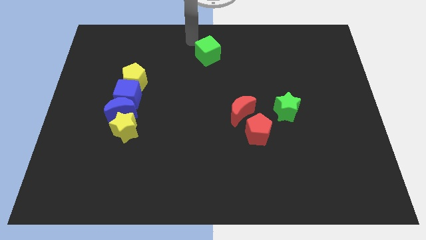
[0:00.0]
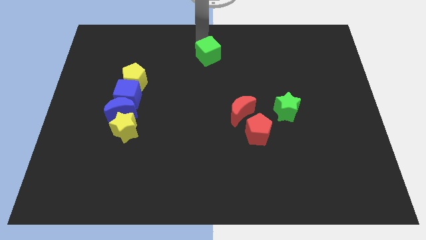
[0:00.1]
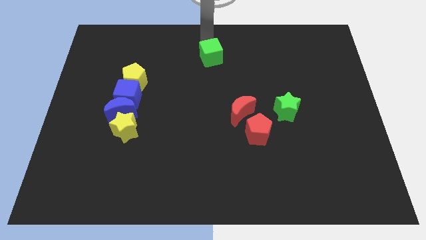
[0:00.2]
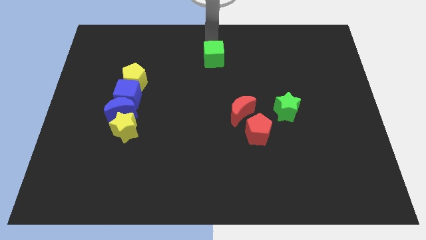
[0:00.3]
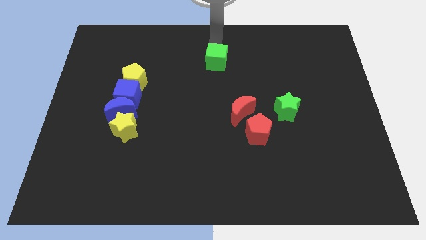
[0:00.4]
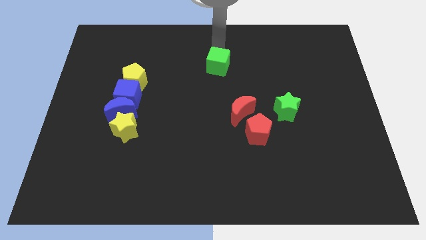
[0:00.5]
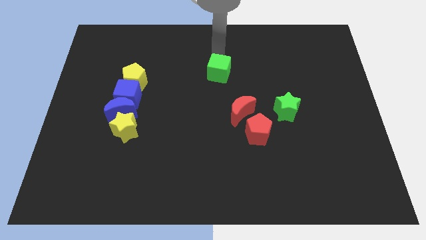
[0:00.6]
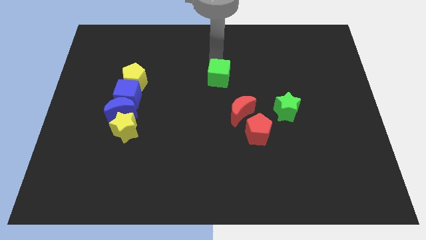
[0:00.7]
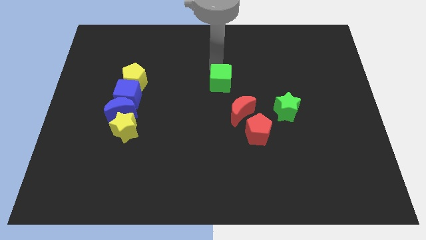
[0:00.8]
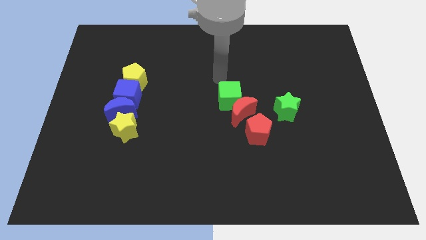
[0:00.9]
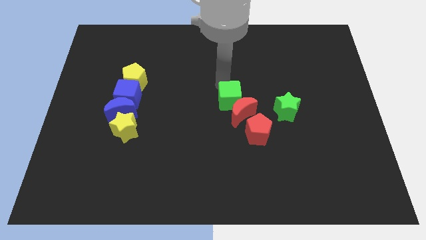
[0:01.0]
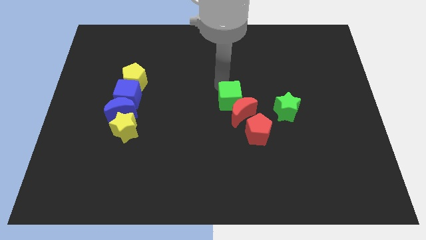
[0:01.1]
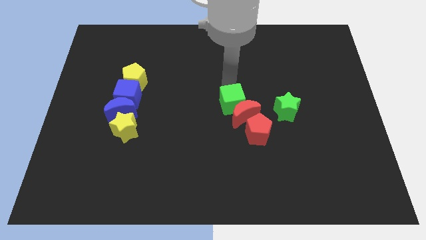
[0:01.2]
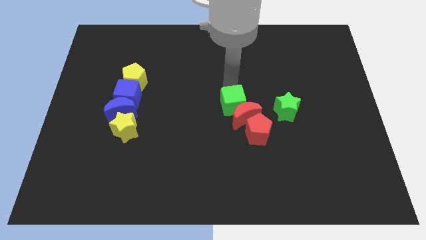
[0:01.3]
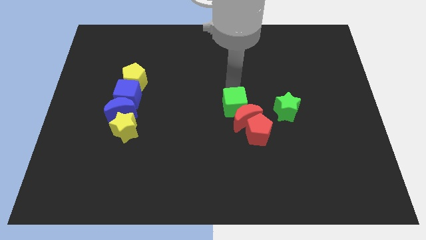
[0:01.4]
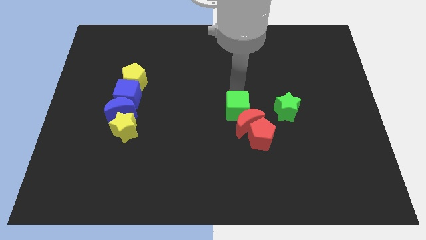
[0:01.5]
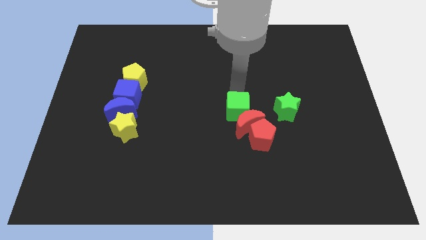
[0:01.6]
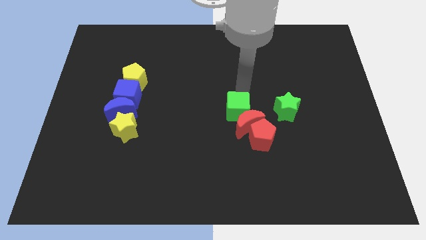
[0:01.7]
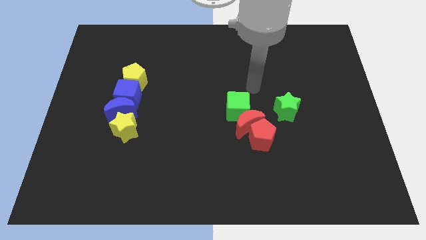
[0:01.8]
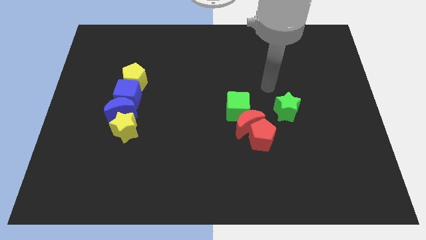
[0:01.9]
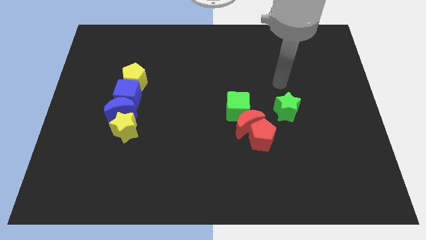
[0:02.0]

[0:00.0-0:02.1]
move the green cube into the red moon

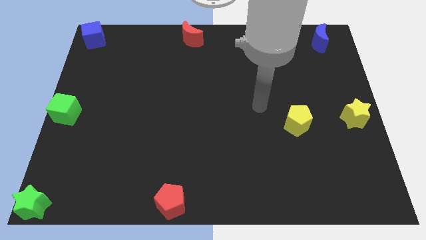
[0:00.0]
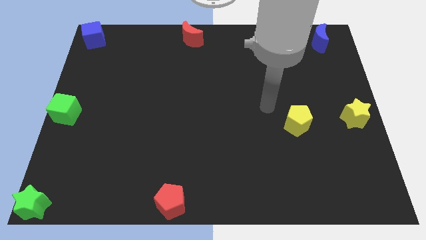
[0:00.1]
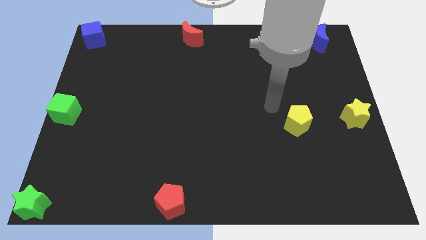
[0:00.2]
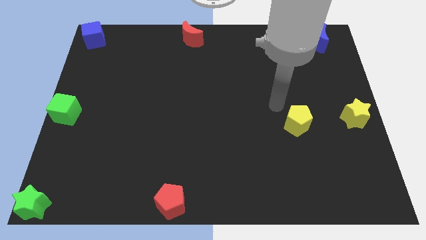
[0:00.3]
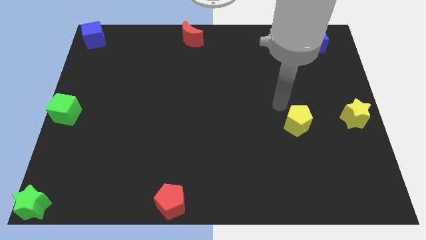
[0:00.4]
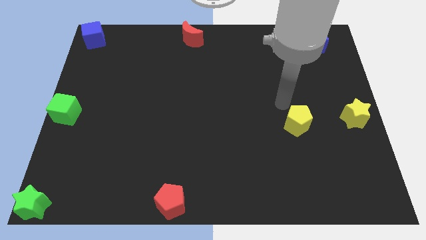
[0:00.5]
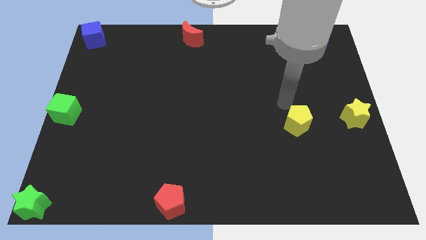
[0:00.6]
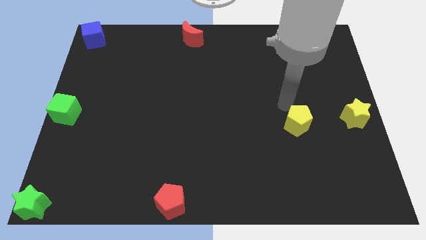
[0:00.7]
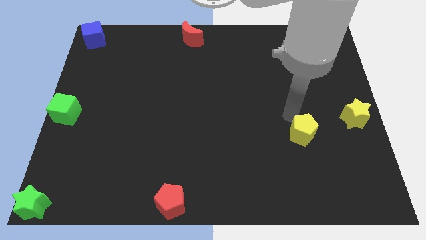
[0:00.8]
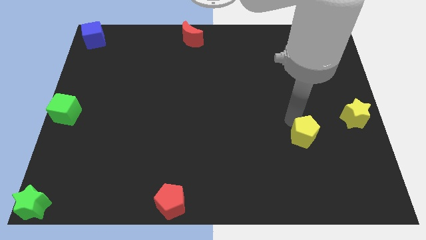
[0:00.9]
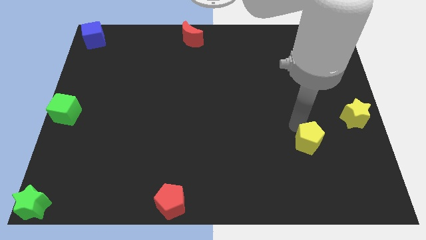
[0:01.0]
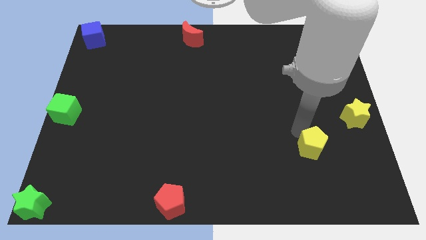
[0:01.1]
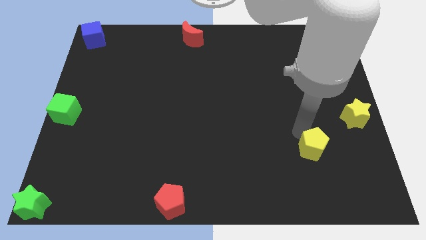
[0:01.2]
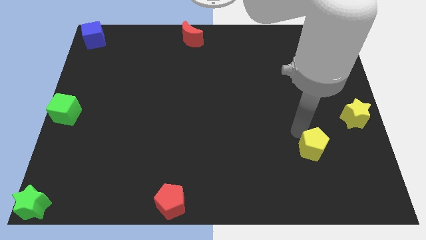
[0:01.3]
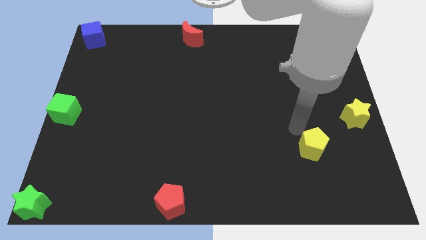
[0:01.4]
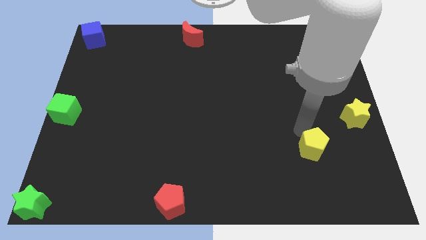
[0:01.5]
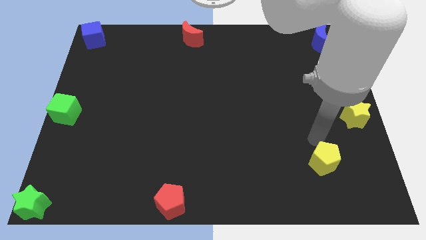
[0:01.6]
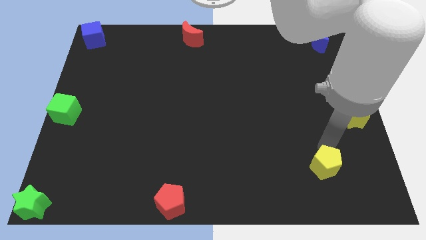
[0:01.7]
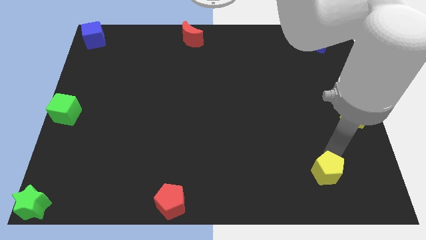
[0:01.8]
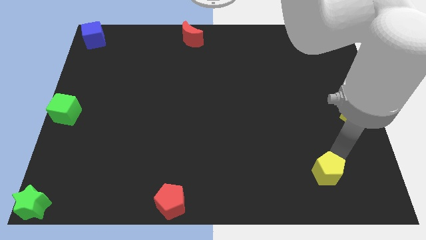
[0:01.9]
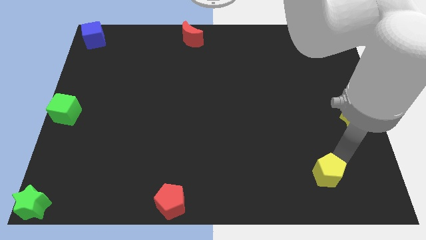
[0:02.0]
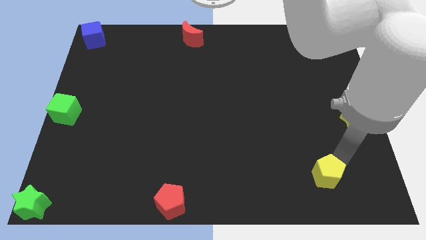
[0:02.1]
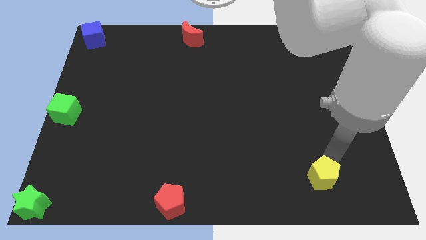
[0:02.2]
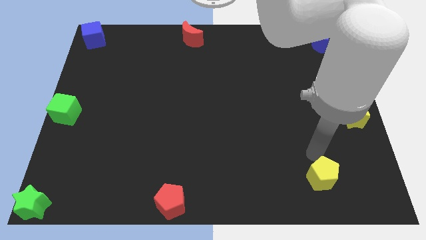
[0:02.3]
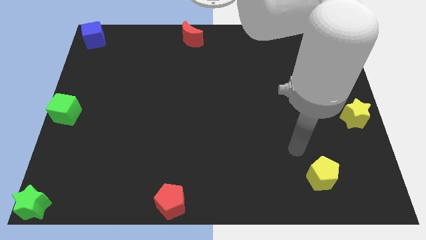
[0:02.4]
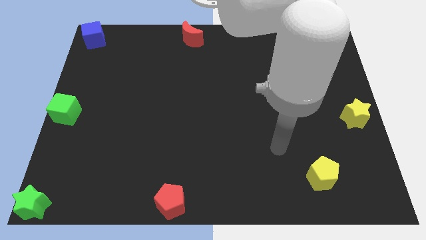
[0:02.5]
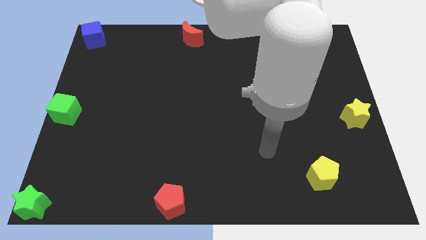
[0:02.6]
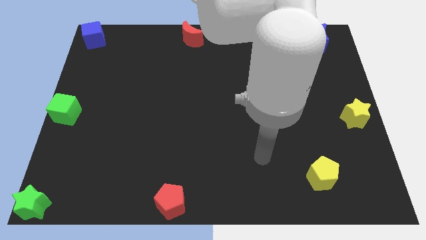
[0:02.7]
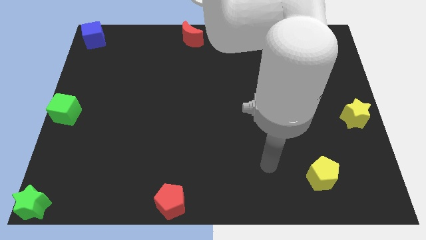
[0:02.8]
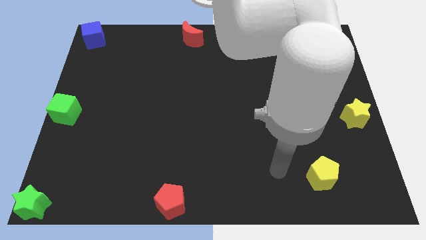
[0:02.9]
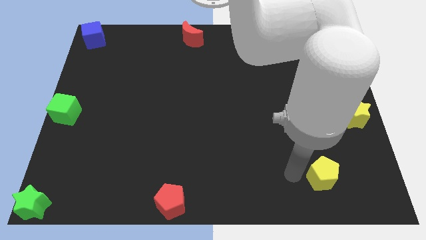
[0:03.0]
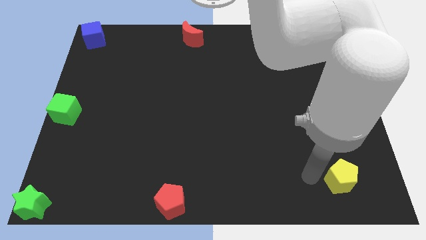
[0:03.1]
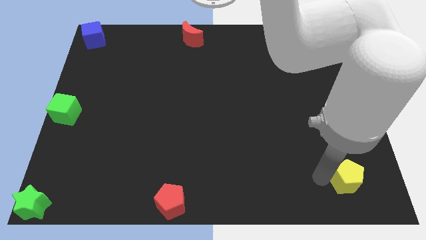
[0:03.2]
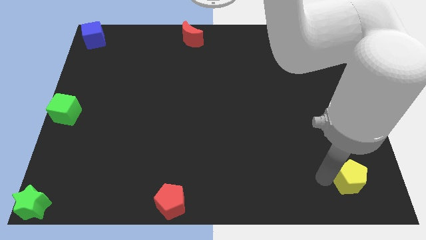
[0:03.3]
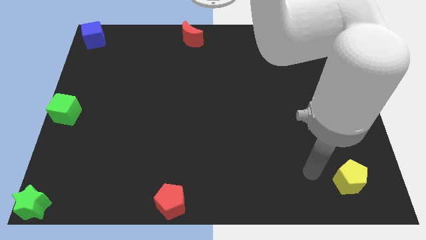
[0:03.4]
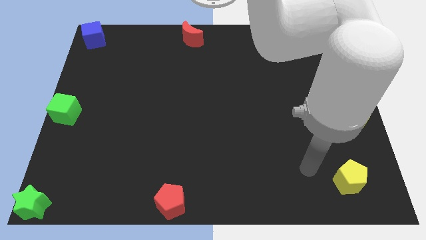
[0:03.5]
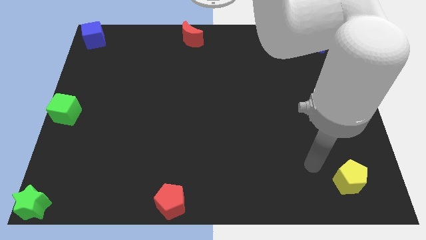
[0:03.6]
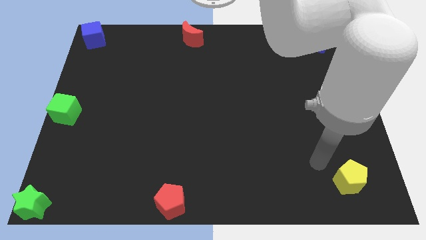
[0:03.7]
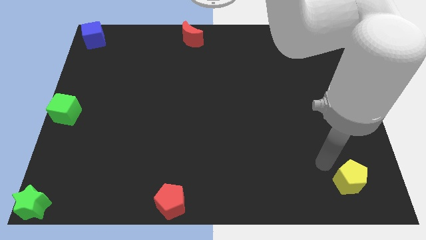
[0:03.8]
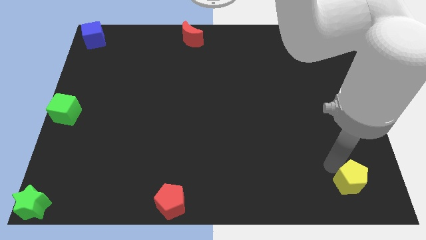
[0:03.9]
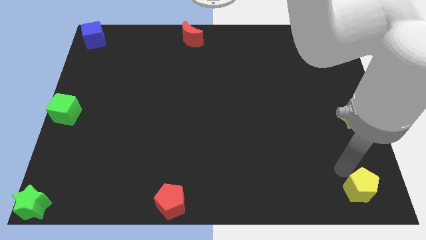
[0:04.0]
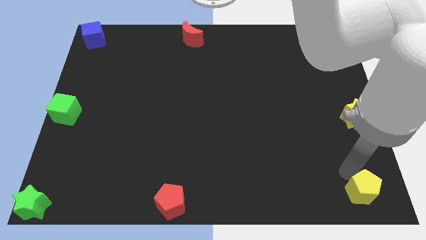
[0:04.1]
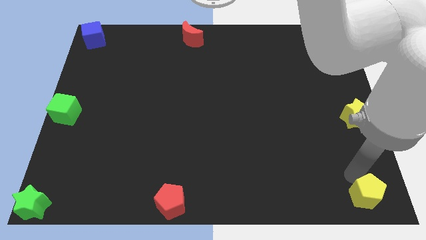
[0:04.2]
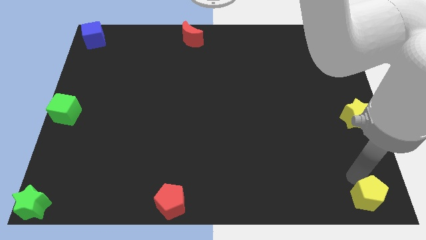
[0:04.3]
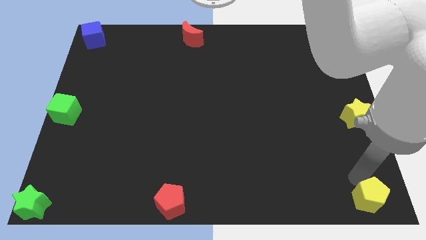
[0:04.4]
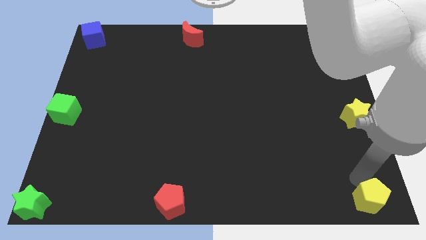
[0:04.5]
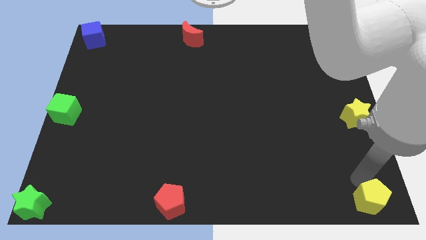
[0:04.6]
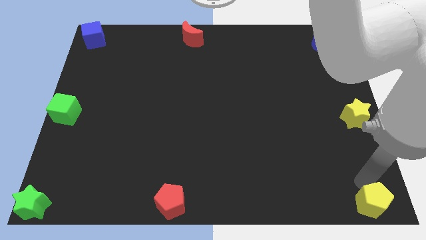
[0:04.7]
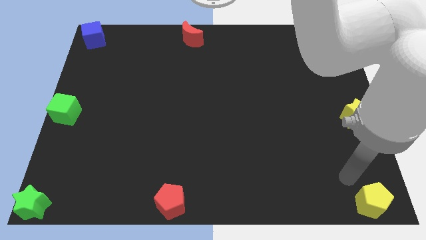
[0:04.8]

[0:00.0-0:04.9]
push the yellow pentagon to the bottom right of the board

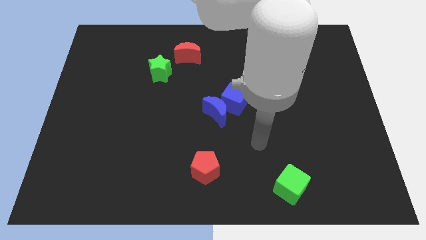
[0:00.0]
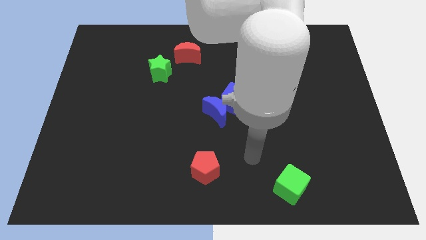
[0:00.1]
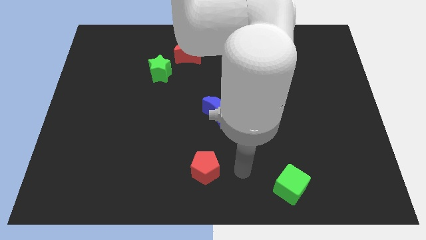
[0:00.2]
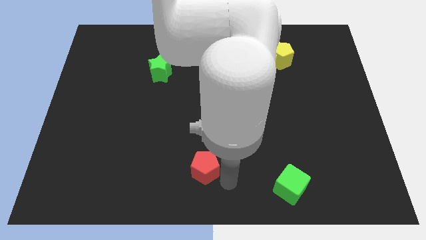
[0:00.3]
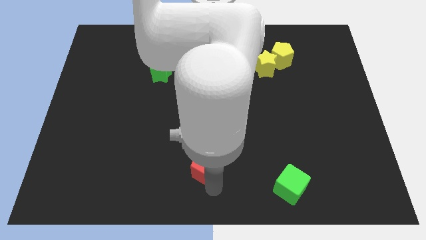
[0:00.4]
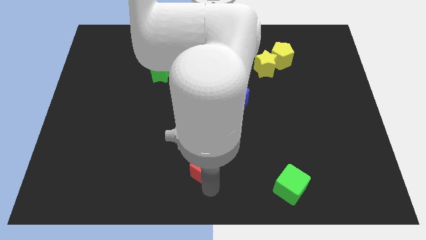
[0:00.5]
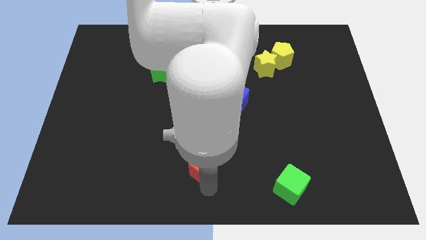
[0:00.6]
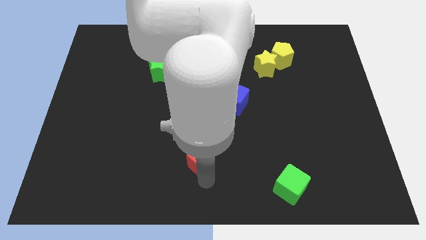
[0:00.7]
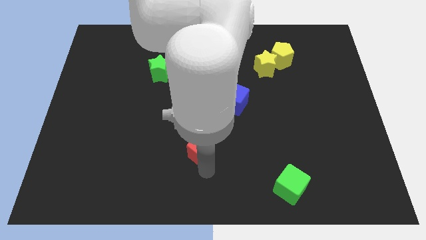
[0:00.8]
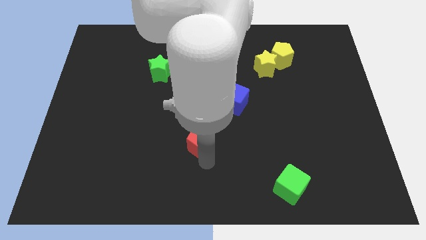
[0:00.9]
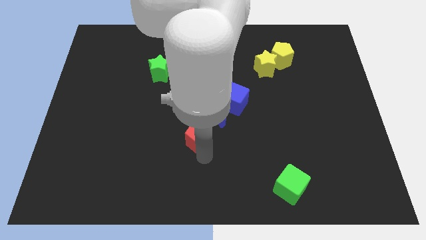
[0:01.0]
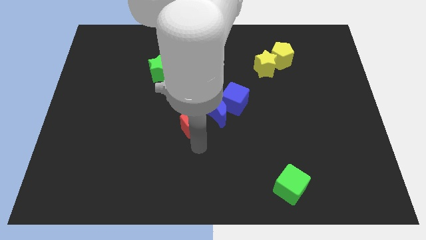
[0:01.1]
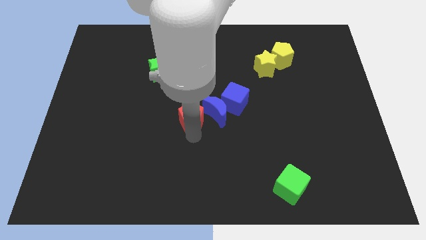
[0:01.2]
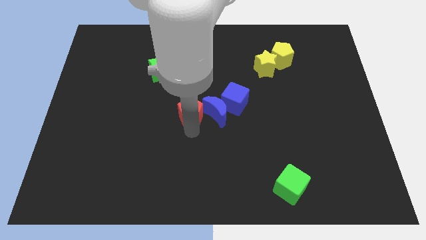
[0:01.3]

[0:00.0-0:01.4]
move the red pentagon to the left of blue moon

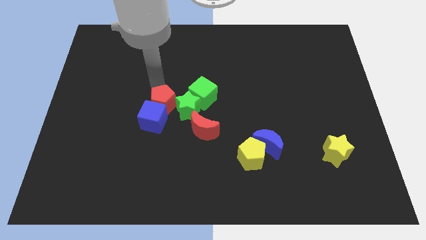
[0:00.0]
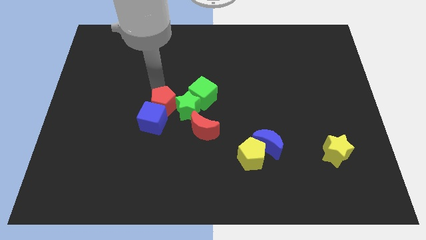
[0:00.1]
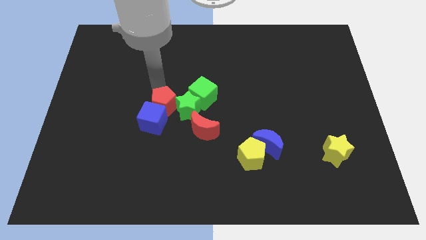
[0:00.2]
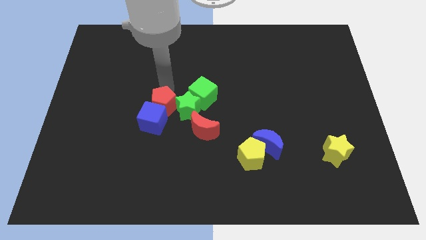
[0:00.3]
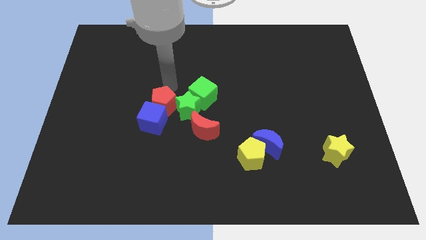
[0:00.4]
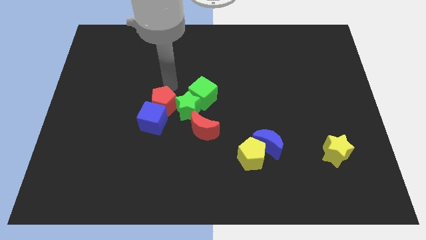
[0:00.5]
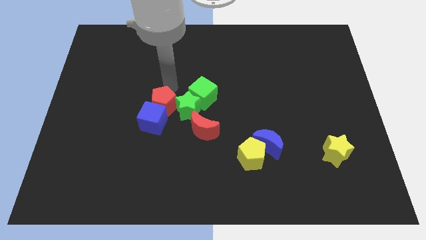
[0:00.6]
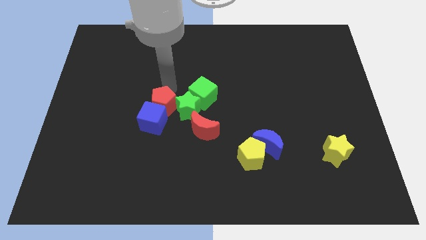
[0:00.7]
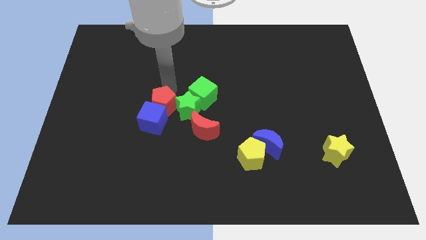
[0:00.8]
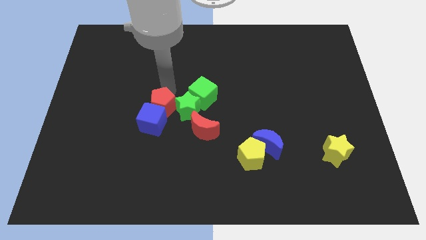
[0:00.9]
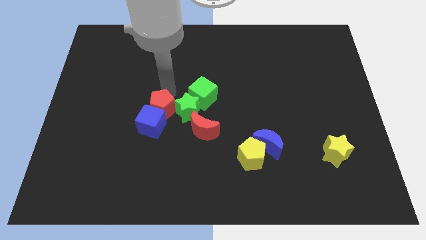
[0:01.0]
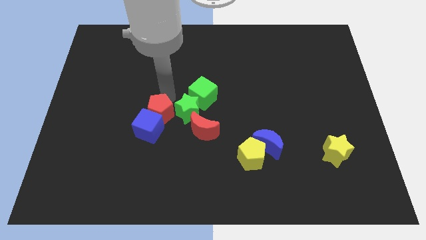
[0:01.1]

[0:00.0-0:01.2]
push the red pentagon and blue cube towards the bottom
